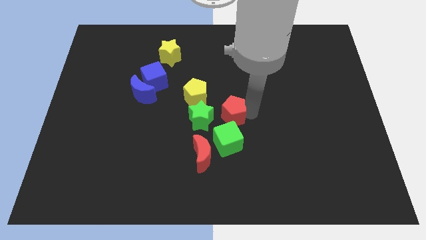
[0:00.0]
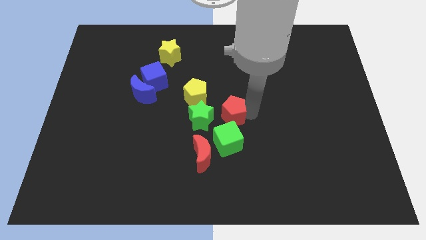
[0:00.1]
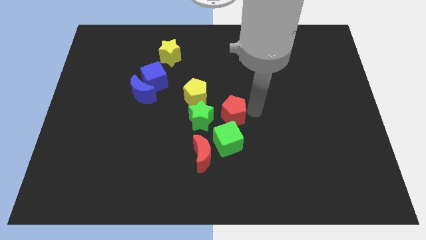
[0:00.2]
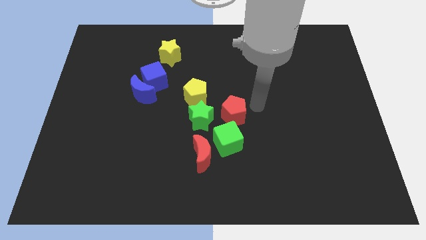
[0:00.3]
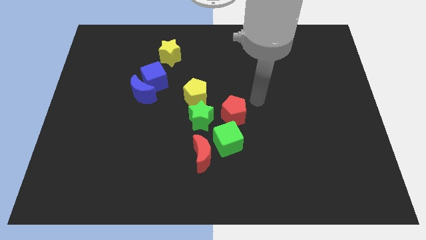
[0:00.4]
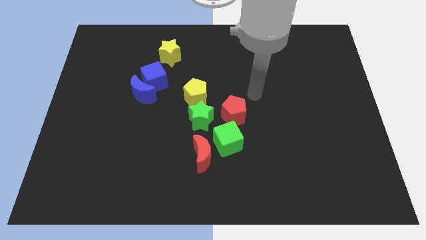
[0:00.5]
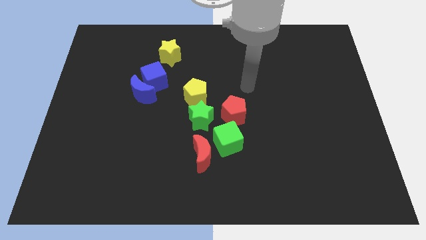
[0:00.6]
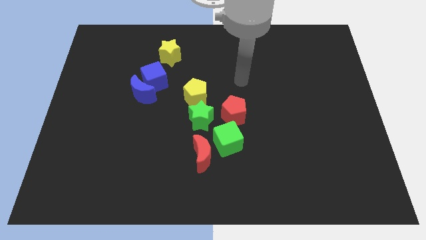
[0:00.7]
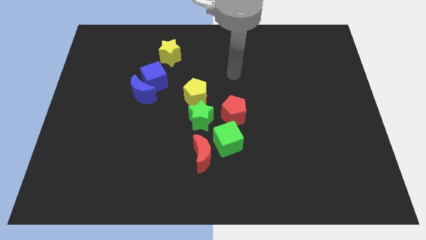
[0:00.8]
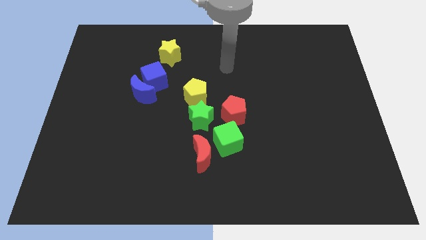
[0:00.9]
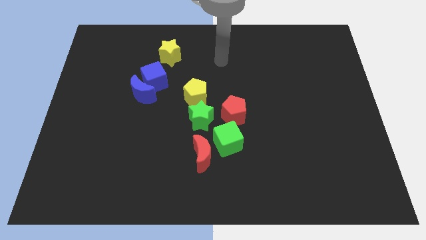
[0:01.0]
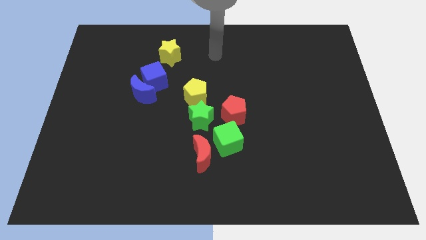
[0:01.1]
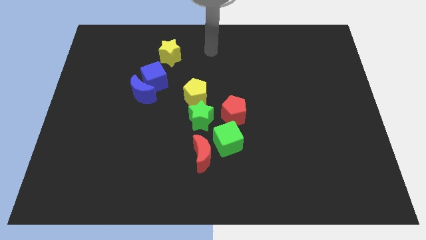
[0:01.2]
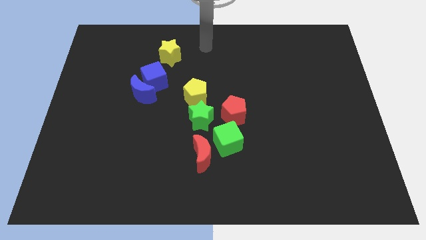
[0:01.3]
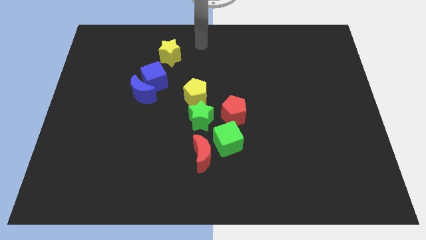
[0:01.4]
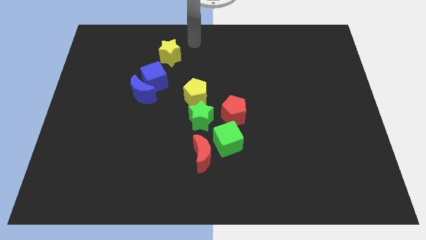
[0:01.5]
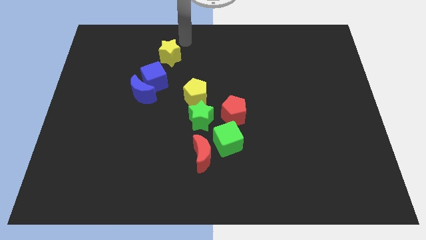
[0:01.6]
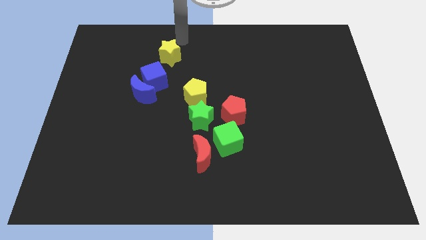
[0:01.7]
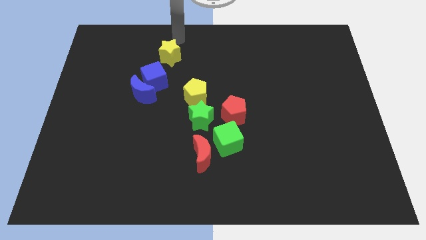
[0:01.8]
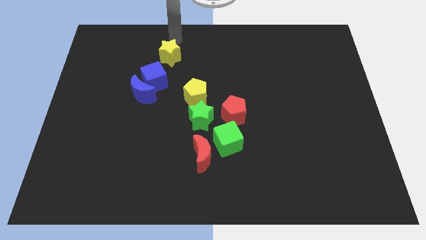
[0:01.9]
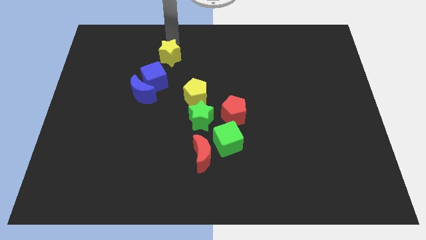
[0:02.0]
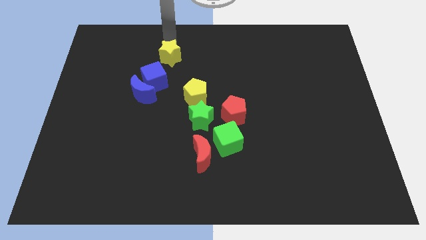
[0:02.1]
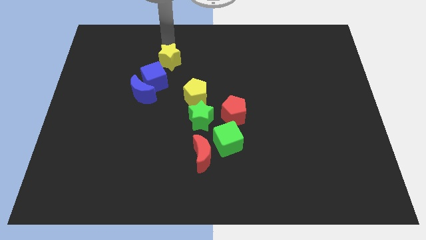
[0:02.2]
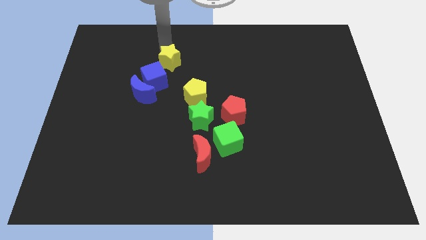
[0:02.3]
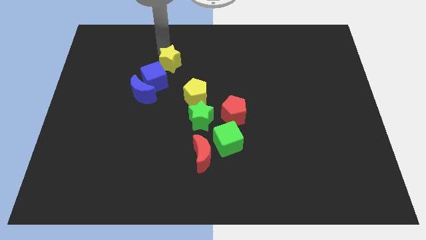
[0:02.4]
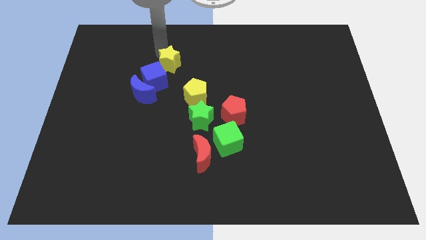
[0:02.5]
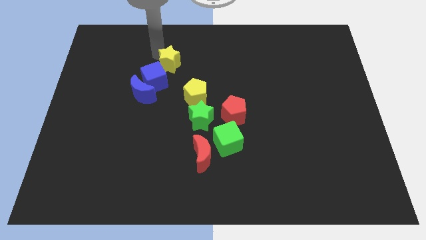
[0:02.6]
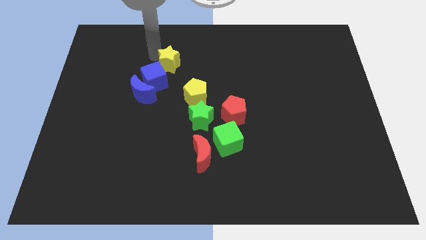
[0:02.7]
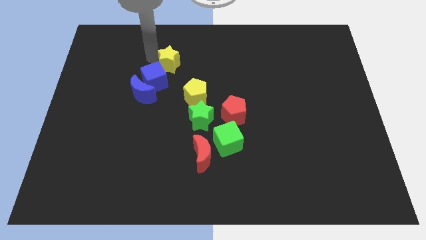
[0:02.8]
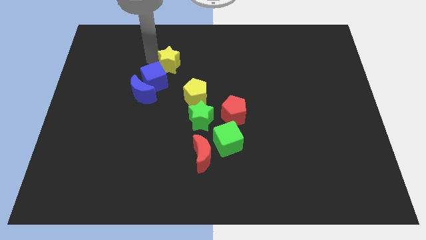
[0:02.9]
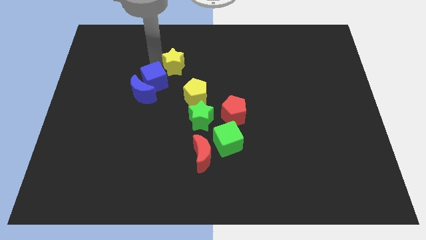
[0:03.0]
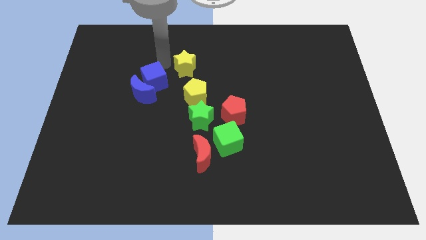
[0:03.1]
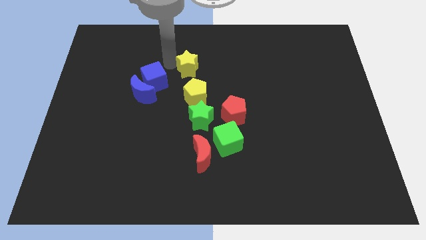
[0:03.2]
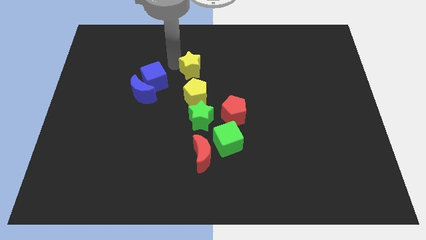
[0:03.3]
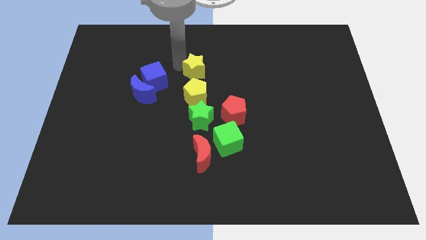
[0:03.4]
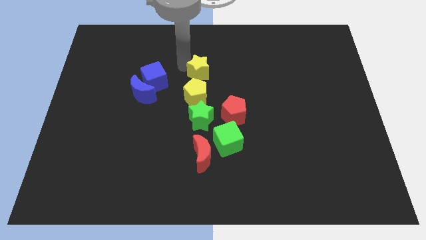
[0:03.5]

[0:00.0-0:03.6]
slide the yellow star to the top of the yellow pentagon

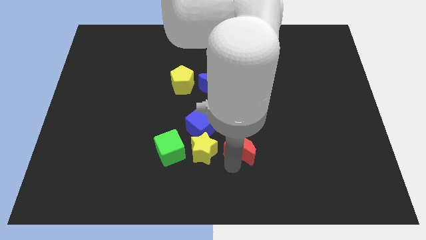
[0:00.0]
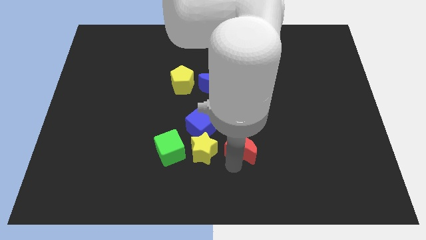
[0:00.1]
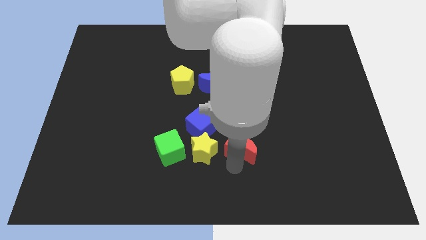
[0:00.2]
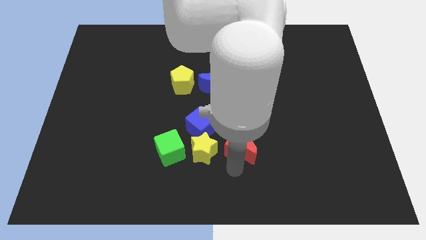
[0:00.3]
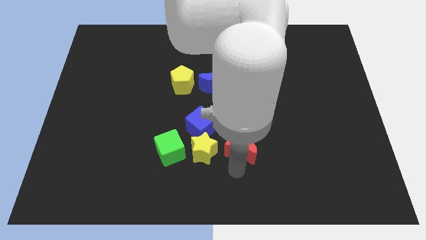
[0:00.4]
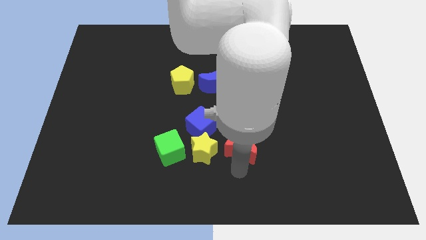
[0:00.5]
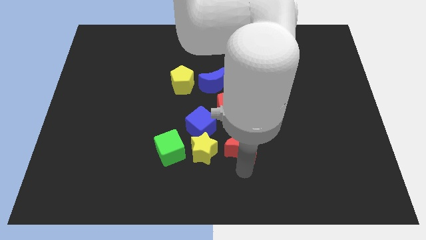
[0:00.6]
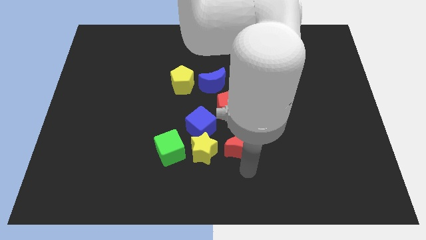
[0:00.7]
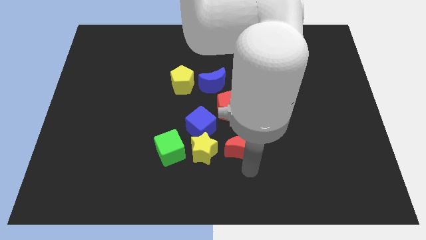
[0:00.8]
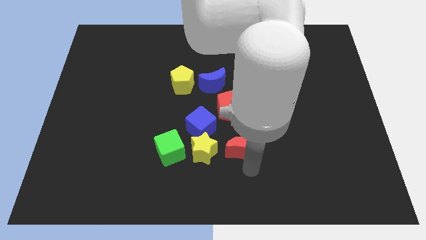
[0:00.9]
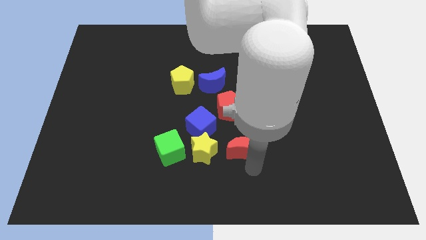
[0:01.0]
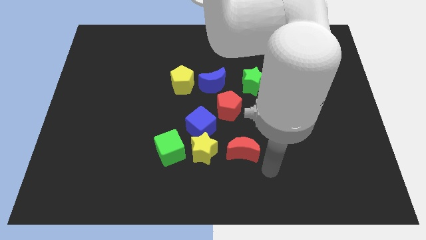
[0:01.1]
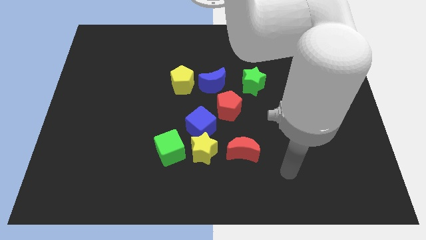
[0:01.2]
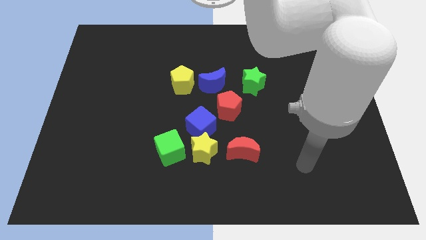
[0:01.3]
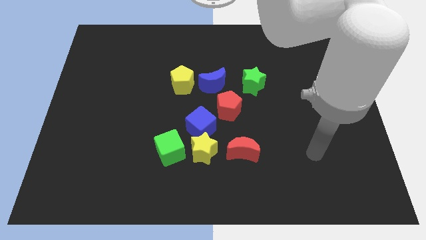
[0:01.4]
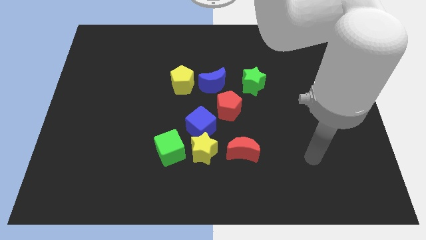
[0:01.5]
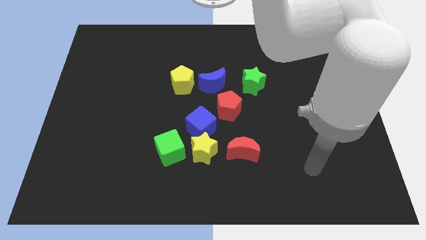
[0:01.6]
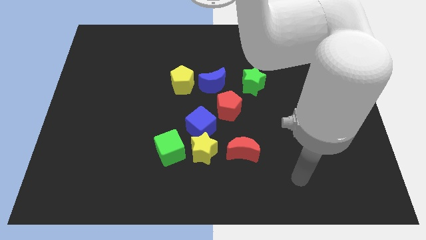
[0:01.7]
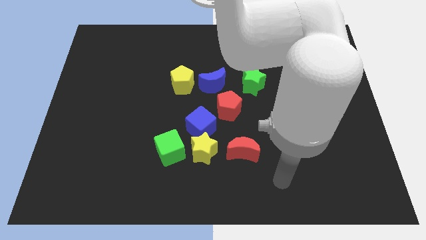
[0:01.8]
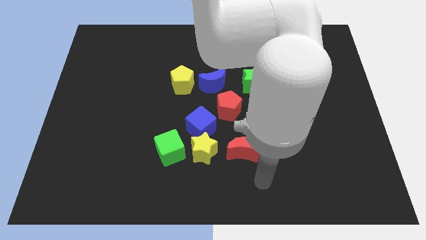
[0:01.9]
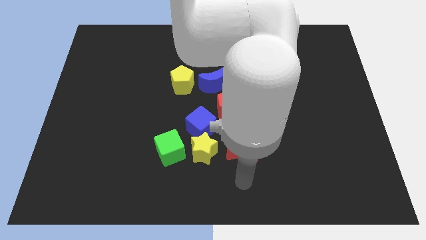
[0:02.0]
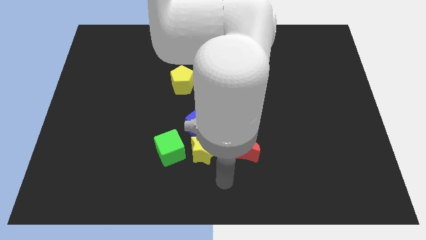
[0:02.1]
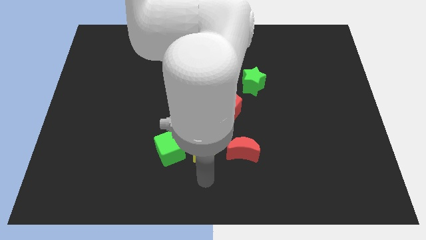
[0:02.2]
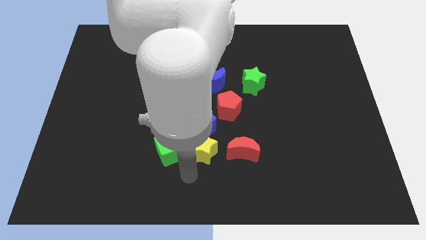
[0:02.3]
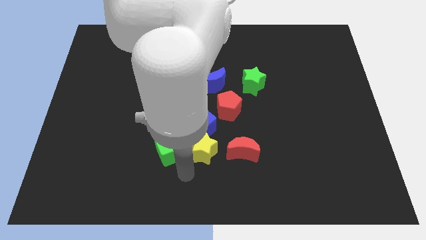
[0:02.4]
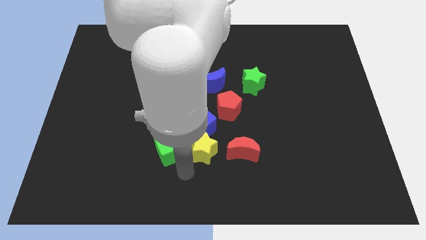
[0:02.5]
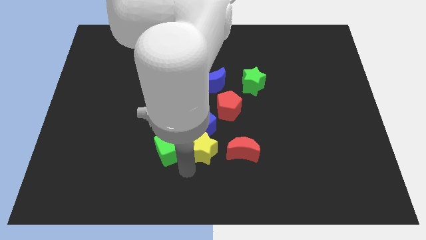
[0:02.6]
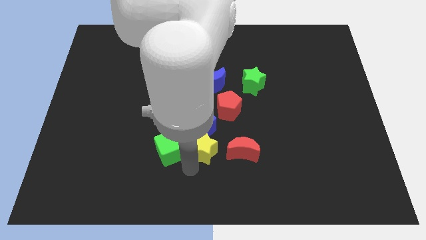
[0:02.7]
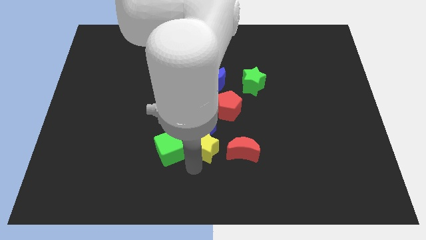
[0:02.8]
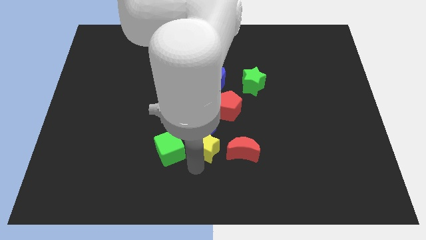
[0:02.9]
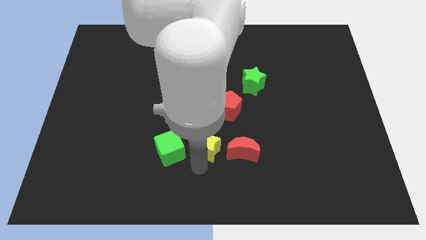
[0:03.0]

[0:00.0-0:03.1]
slightly push the red crescent and yelow star upwards

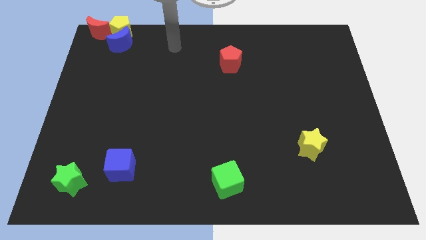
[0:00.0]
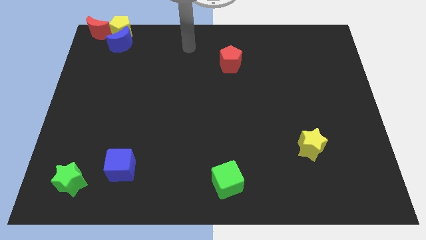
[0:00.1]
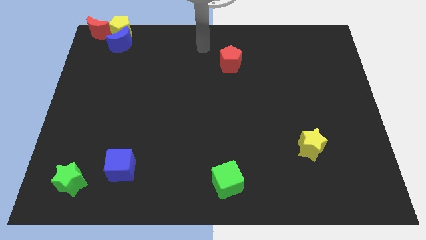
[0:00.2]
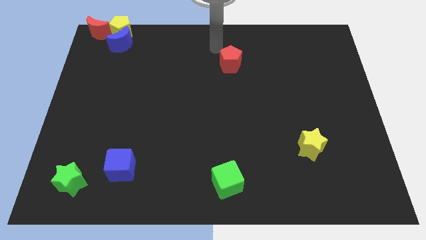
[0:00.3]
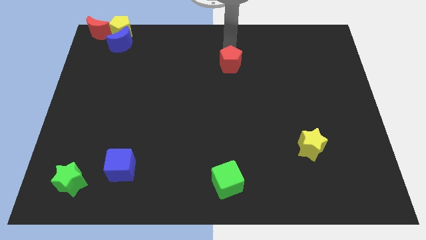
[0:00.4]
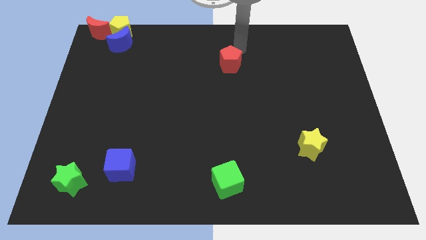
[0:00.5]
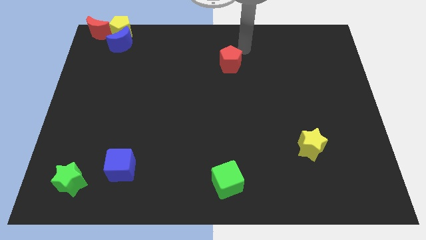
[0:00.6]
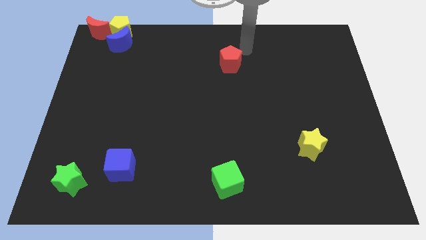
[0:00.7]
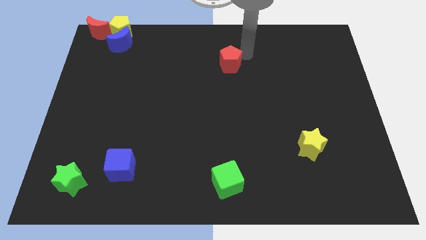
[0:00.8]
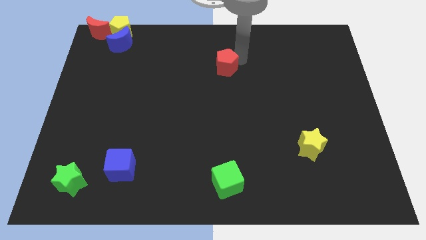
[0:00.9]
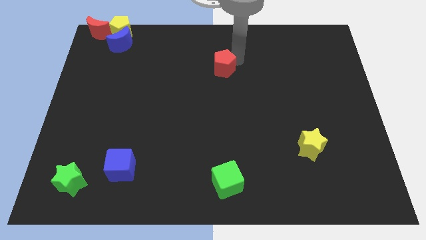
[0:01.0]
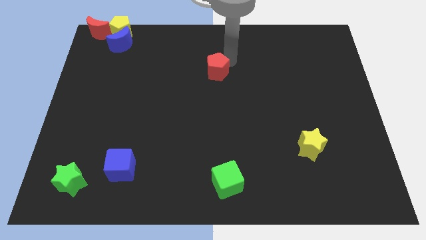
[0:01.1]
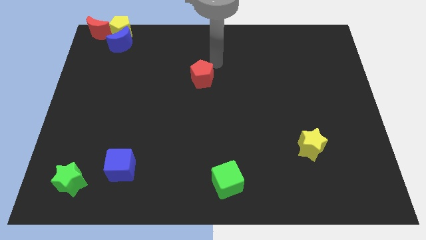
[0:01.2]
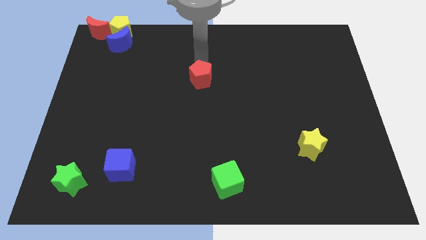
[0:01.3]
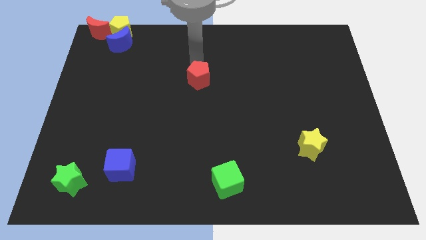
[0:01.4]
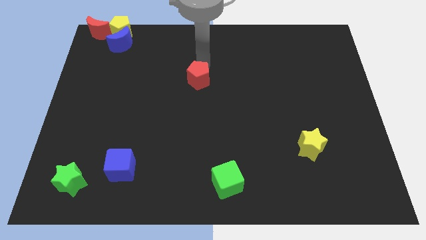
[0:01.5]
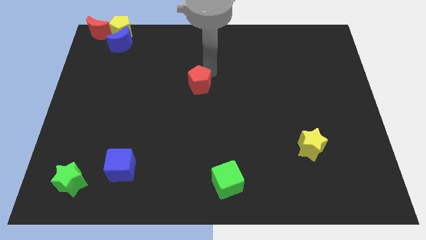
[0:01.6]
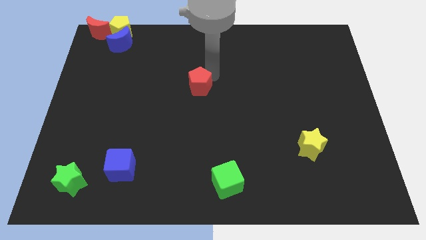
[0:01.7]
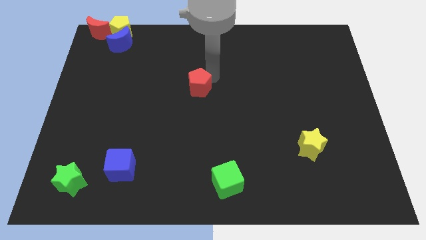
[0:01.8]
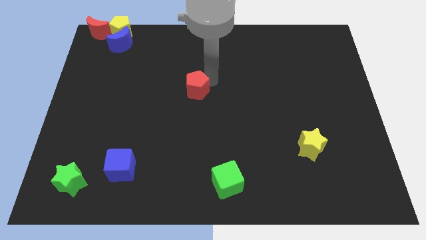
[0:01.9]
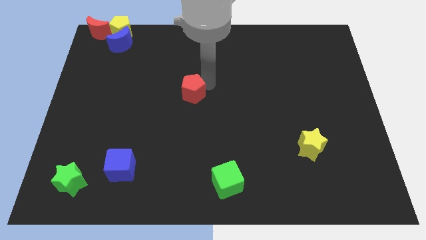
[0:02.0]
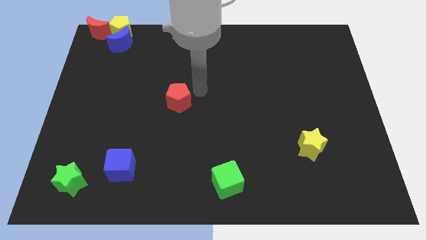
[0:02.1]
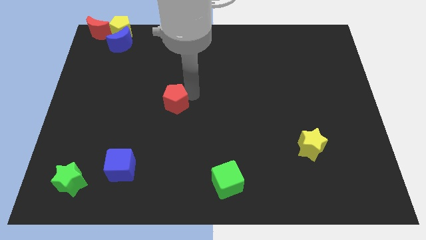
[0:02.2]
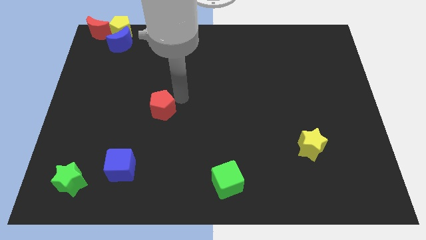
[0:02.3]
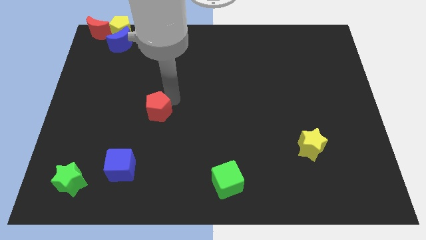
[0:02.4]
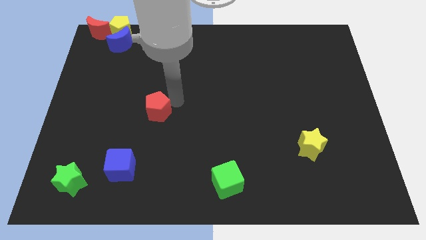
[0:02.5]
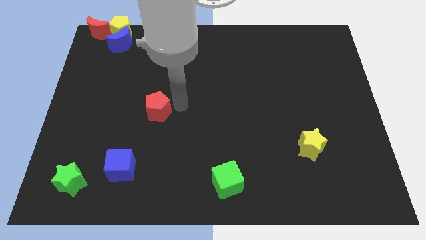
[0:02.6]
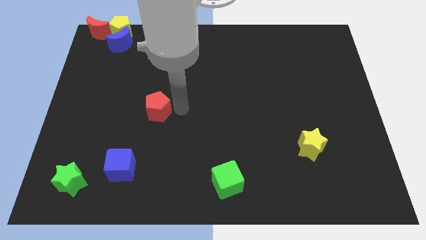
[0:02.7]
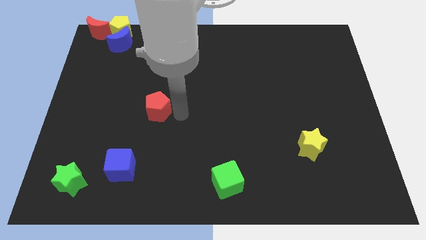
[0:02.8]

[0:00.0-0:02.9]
drag the red pentagon to the top right side of the blue cube
